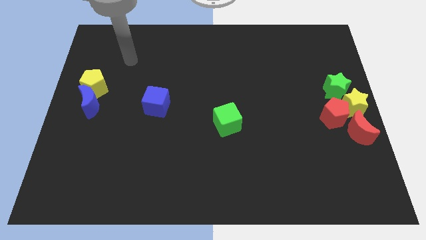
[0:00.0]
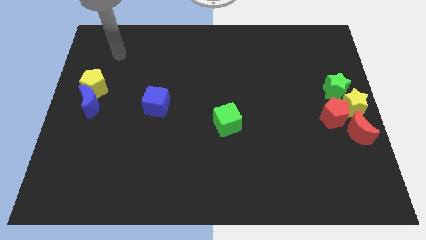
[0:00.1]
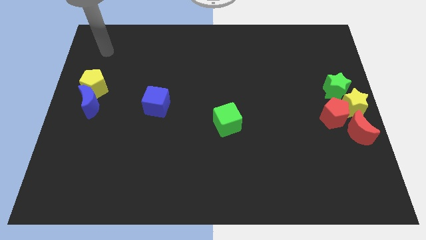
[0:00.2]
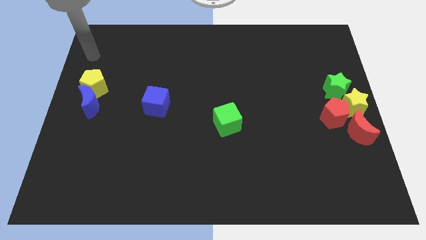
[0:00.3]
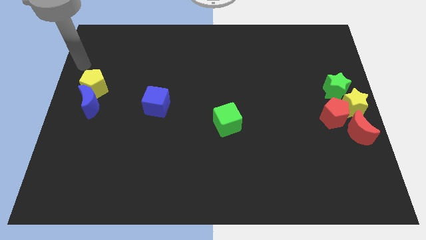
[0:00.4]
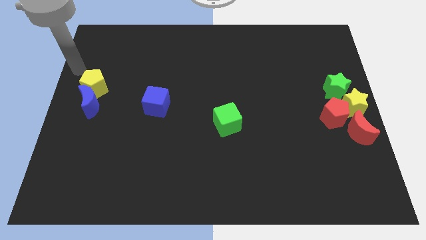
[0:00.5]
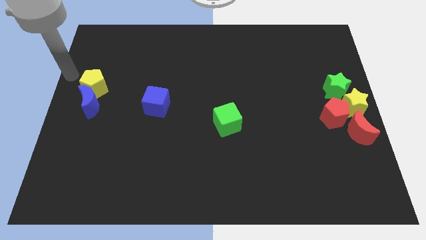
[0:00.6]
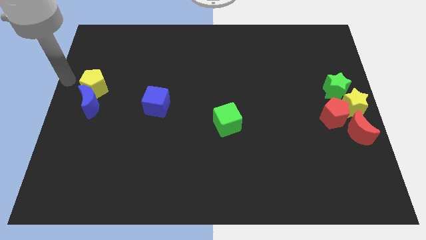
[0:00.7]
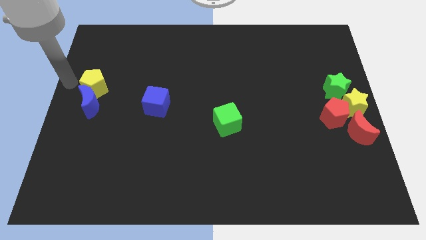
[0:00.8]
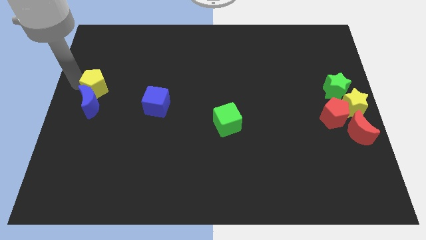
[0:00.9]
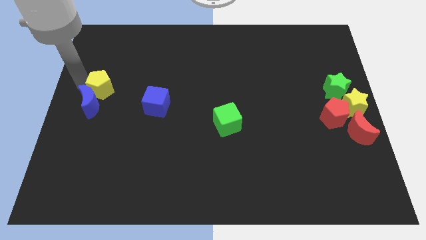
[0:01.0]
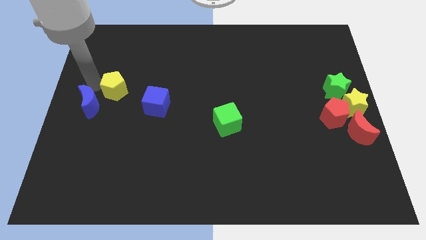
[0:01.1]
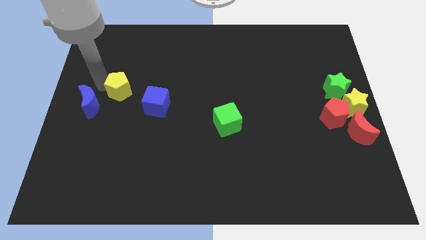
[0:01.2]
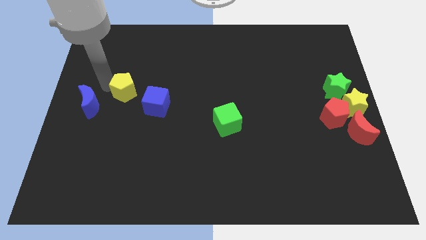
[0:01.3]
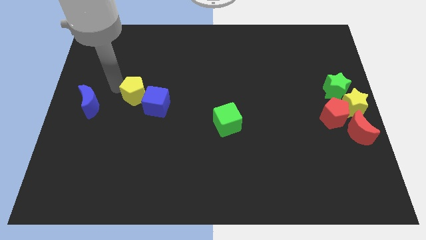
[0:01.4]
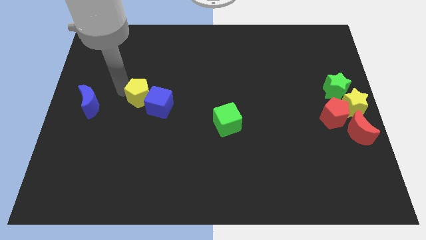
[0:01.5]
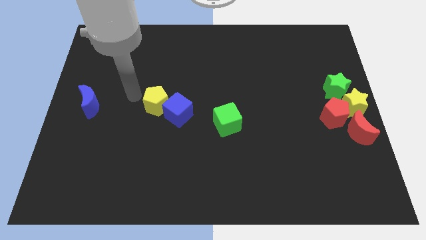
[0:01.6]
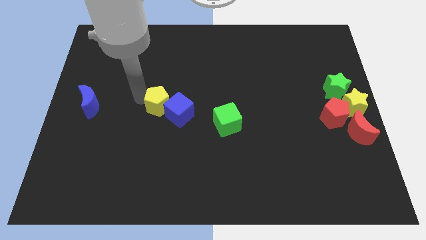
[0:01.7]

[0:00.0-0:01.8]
move the yellow pentagon into the blue cube

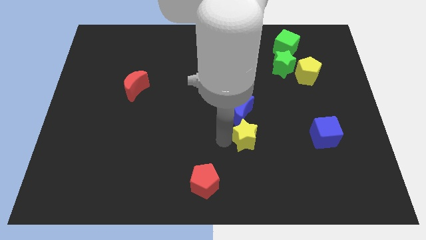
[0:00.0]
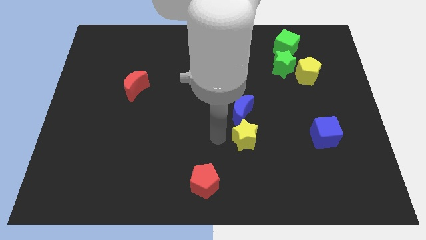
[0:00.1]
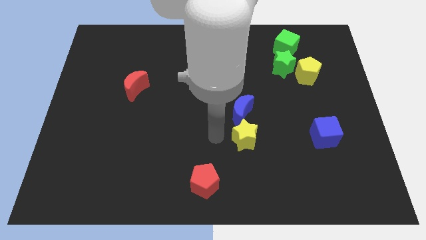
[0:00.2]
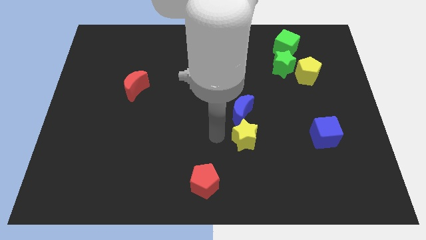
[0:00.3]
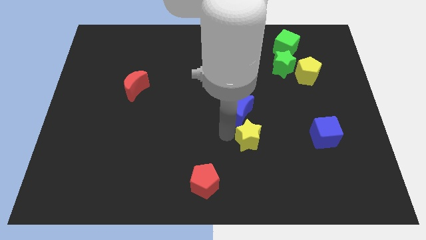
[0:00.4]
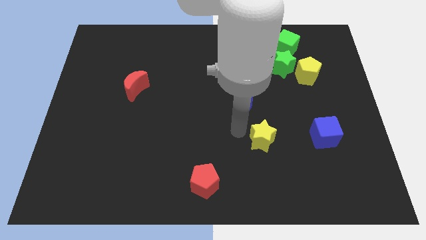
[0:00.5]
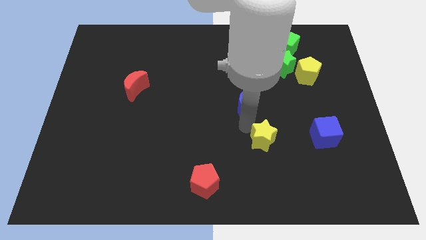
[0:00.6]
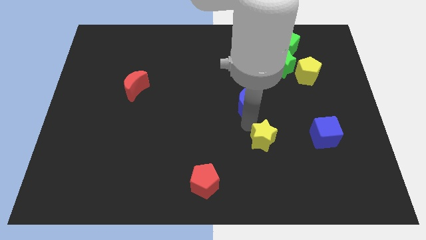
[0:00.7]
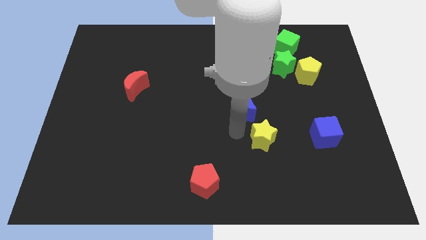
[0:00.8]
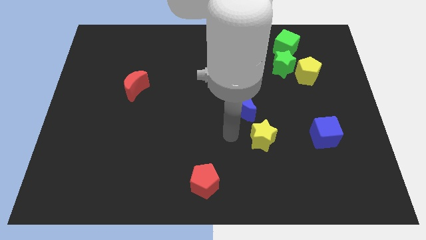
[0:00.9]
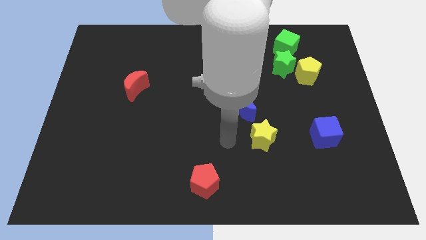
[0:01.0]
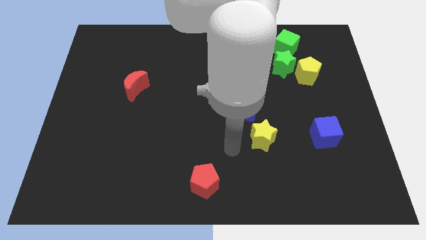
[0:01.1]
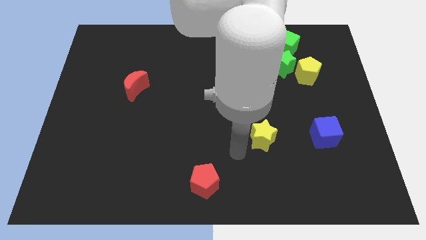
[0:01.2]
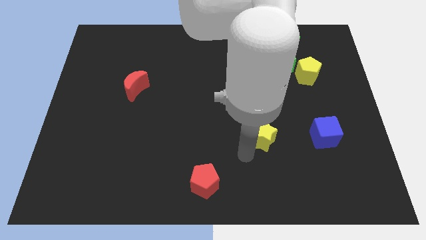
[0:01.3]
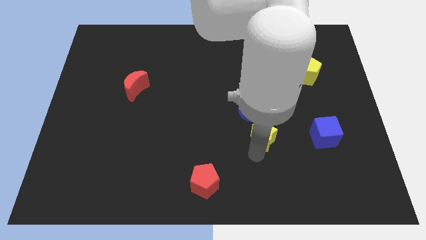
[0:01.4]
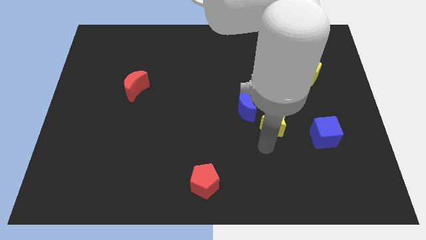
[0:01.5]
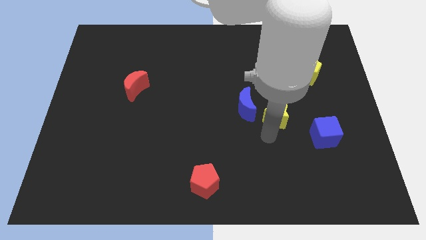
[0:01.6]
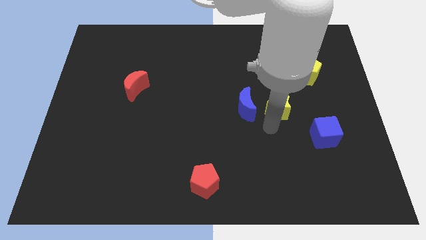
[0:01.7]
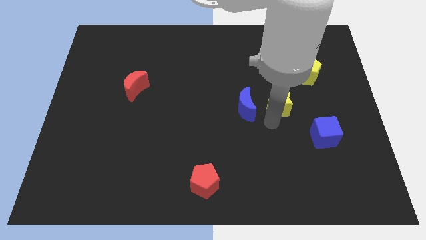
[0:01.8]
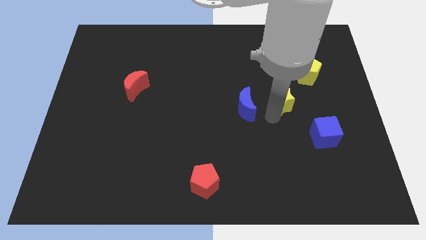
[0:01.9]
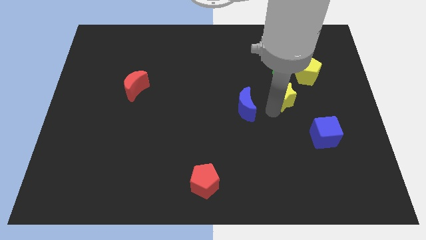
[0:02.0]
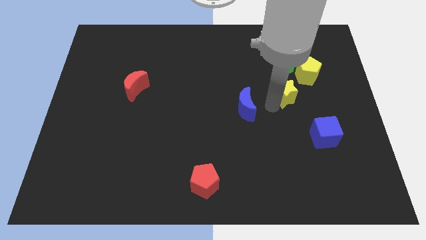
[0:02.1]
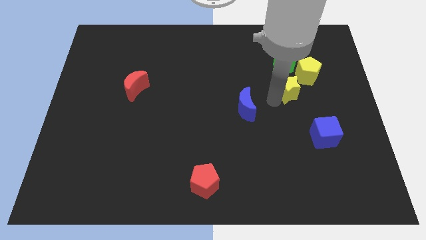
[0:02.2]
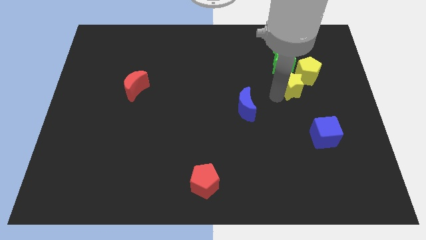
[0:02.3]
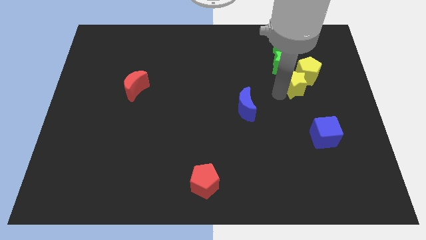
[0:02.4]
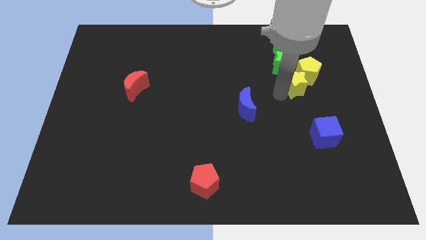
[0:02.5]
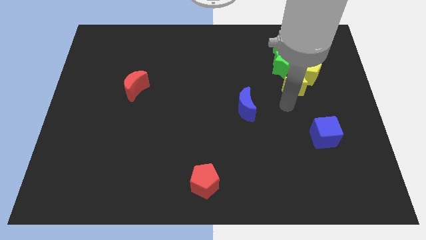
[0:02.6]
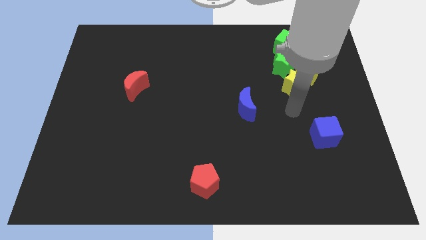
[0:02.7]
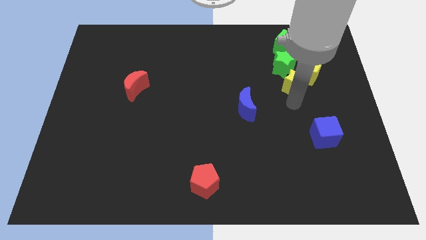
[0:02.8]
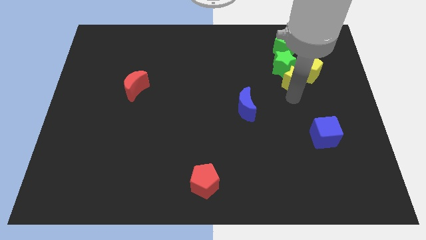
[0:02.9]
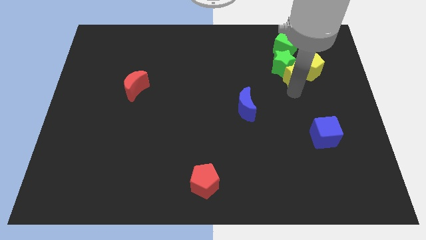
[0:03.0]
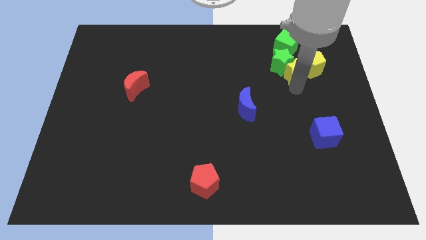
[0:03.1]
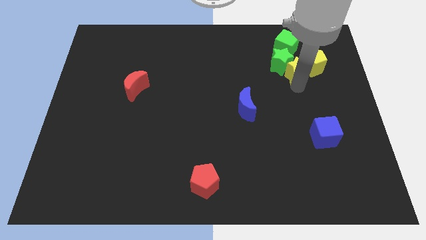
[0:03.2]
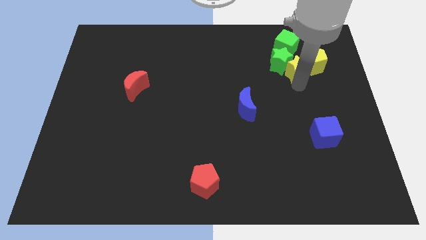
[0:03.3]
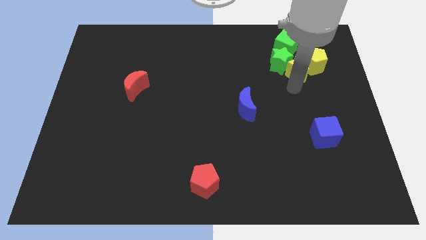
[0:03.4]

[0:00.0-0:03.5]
move the yellow star to the group of blocks

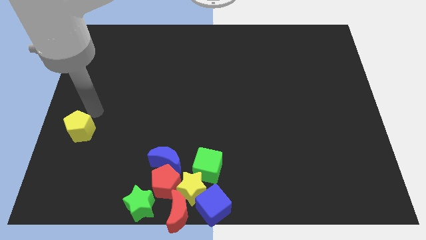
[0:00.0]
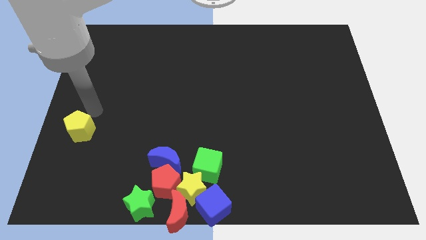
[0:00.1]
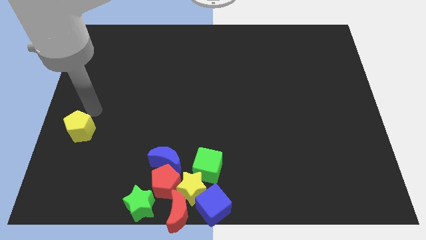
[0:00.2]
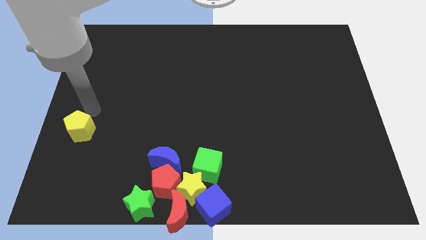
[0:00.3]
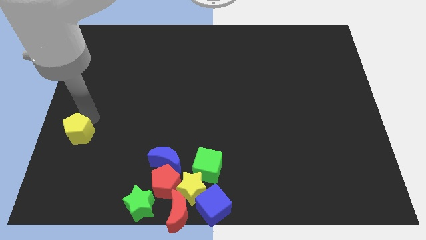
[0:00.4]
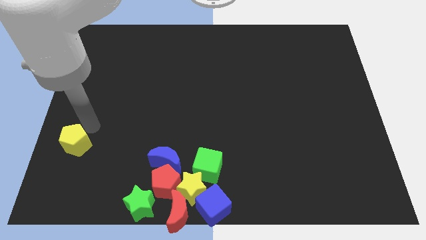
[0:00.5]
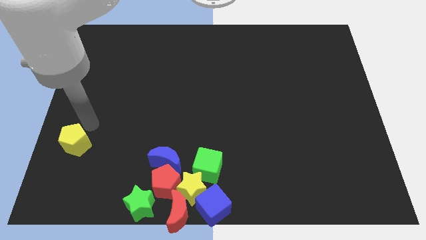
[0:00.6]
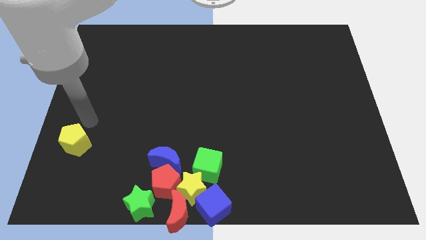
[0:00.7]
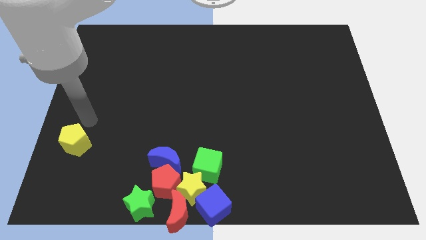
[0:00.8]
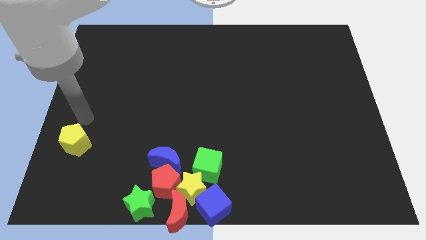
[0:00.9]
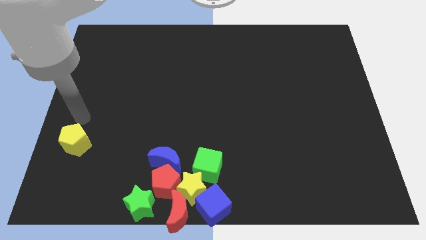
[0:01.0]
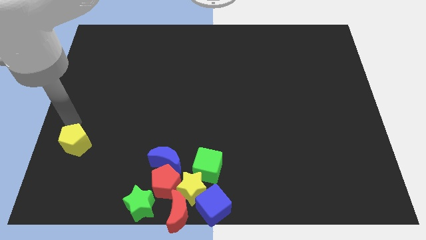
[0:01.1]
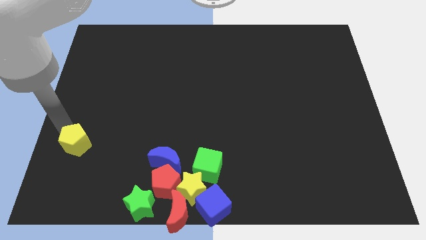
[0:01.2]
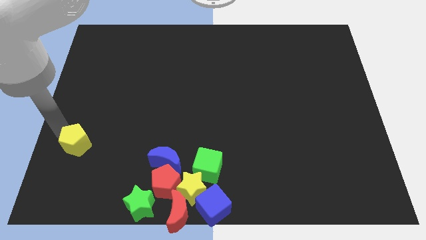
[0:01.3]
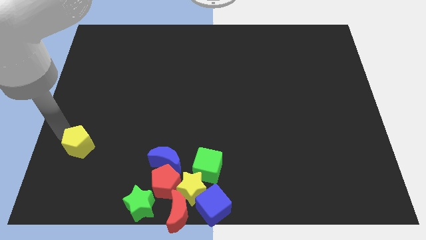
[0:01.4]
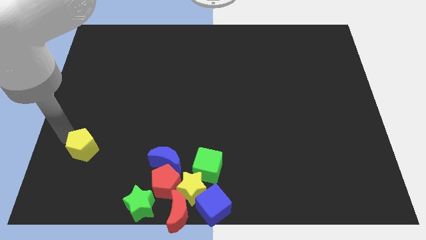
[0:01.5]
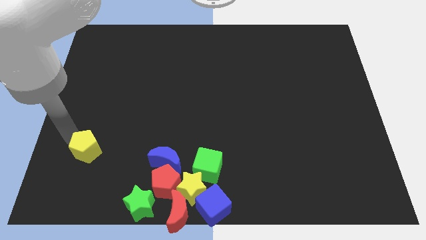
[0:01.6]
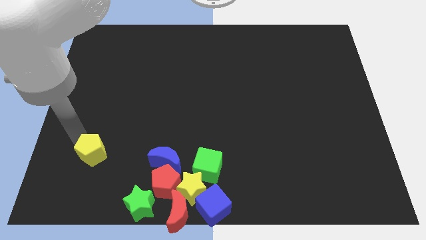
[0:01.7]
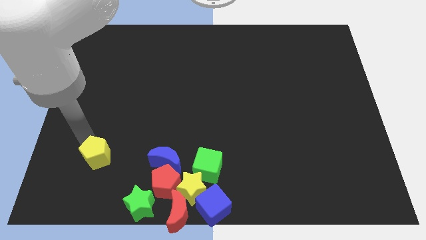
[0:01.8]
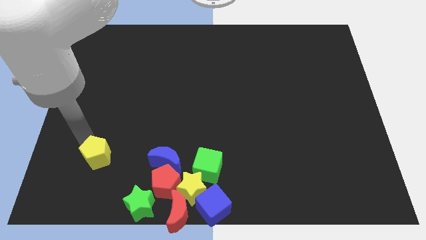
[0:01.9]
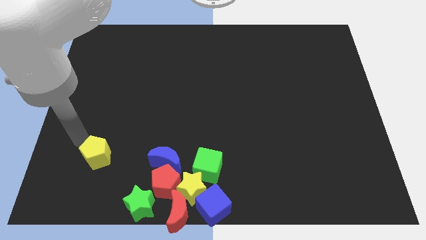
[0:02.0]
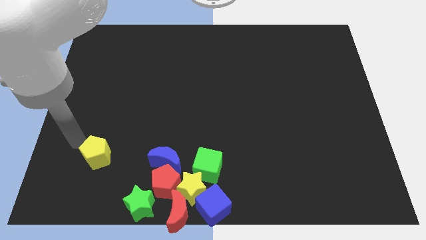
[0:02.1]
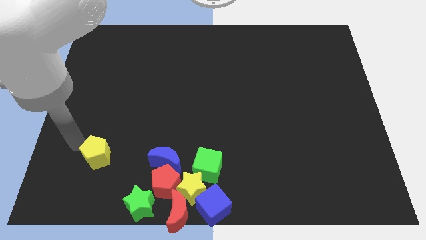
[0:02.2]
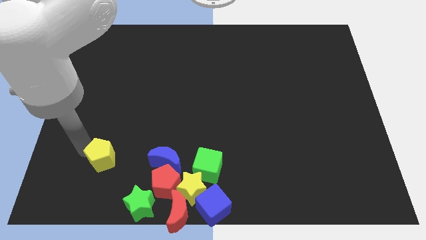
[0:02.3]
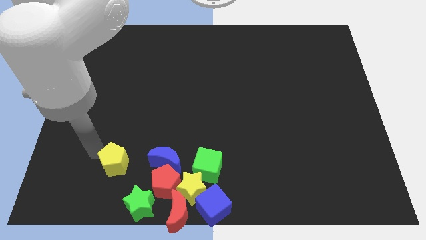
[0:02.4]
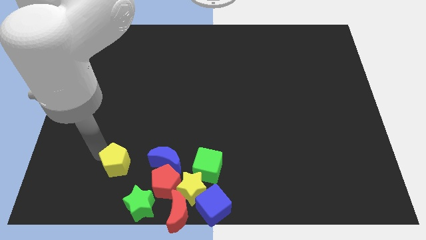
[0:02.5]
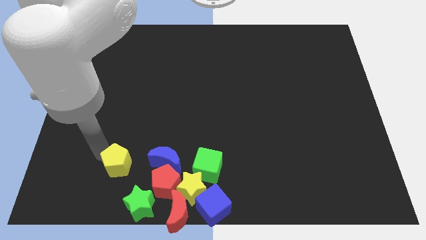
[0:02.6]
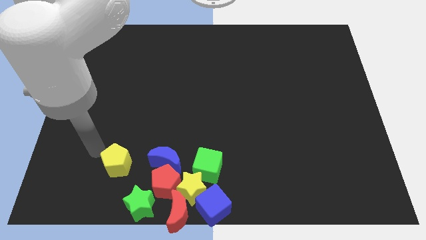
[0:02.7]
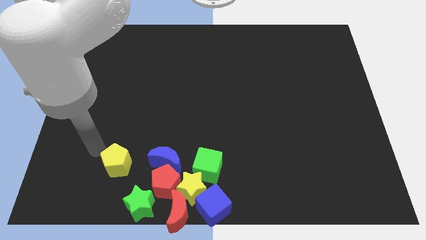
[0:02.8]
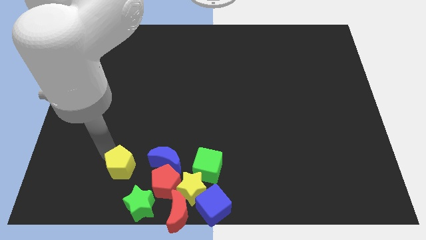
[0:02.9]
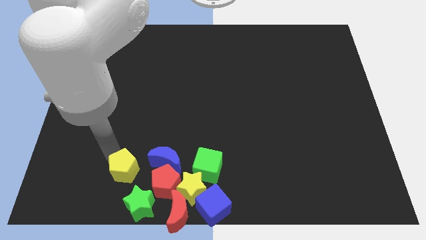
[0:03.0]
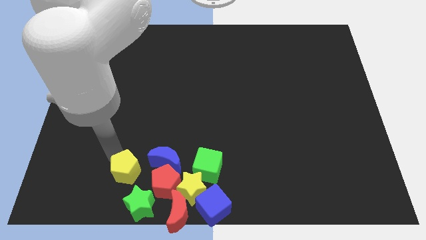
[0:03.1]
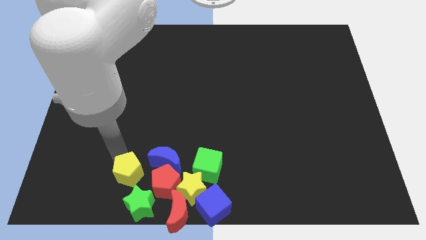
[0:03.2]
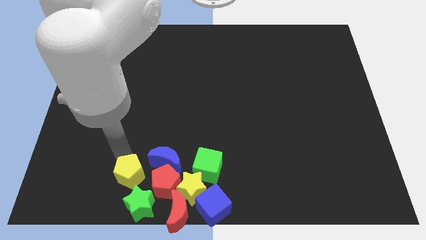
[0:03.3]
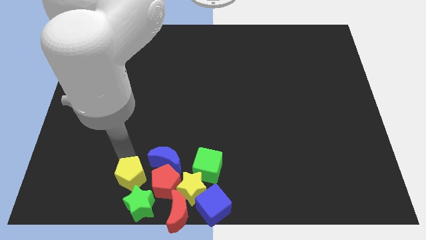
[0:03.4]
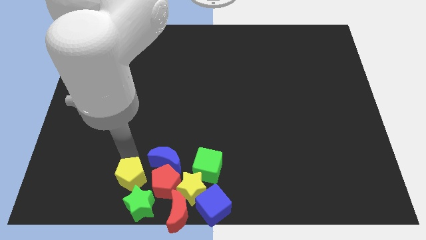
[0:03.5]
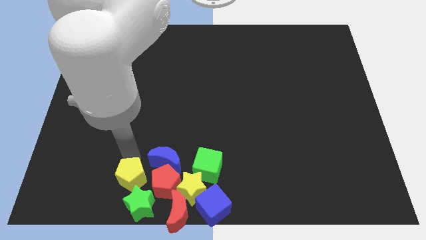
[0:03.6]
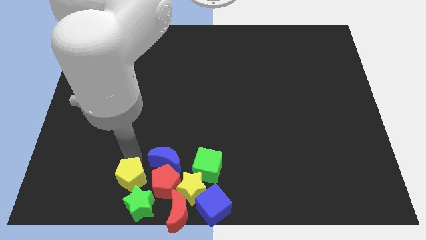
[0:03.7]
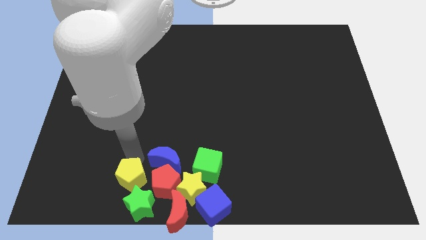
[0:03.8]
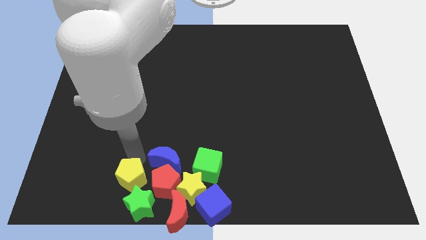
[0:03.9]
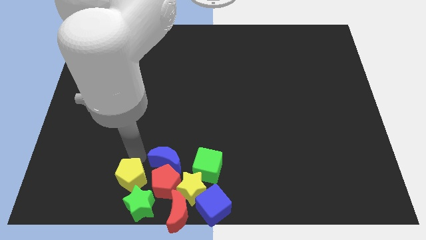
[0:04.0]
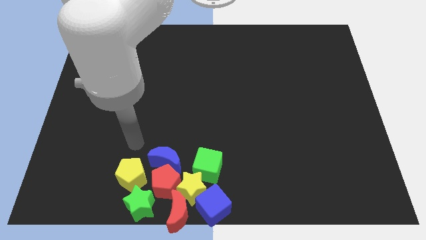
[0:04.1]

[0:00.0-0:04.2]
move the yellow pentagon left to the red pentagon
